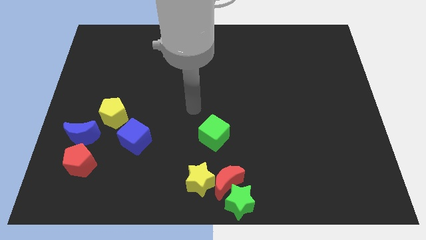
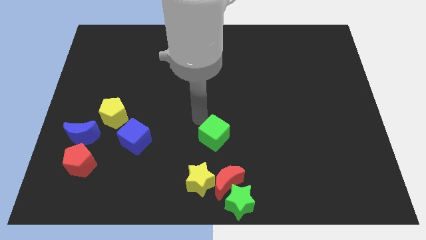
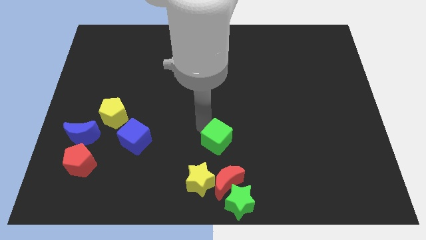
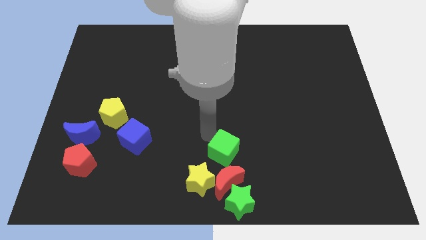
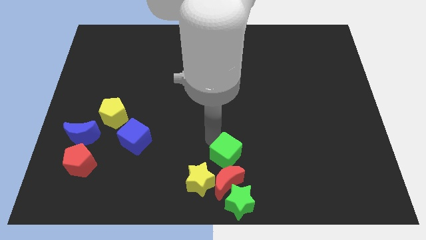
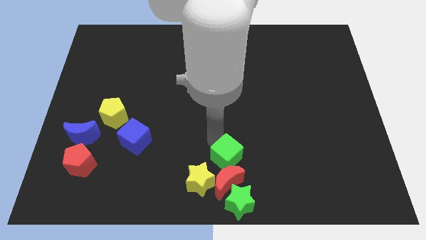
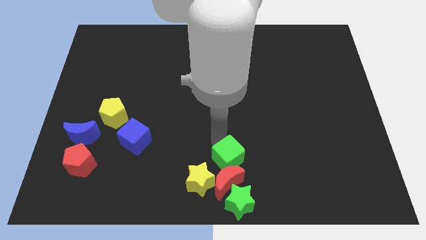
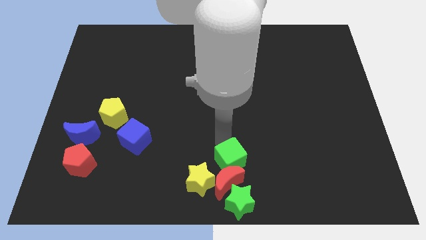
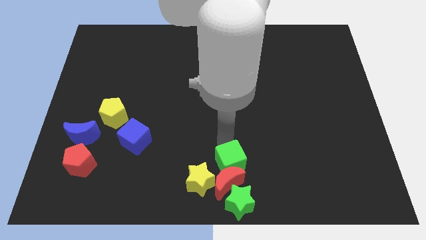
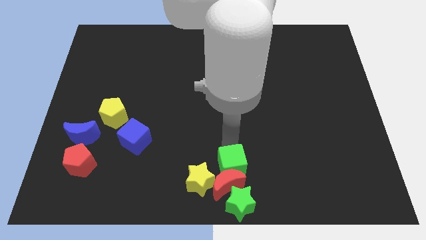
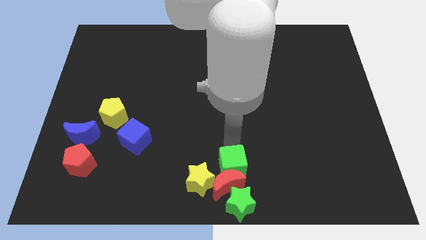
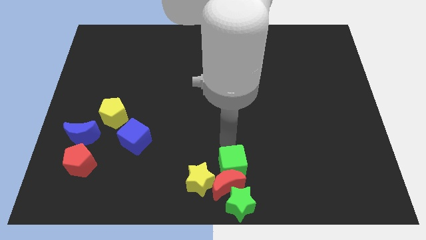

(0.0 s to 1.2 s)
move green cube close to red crescent

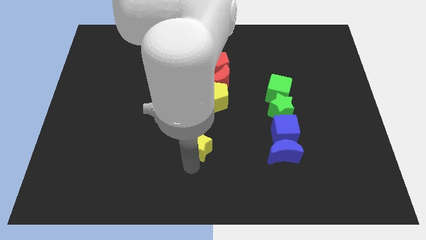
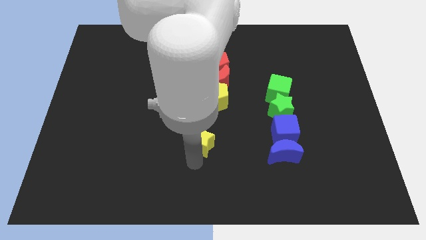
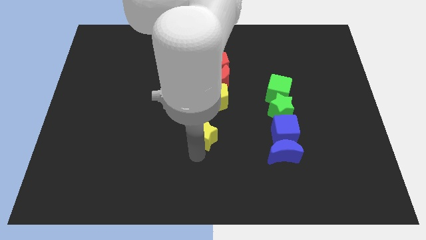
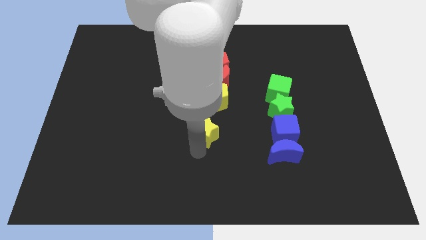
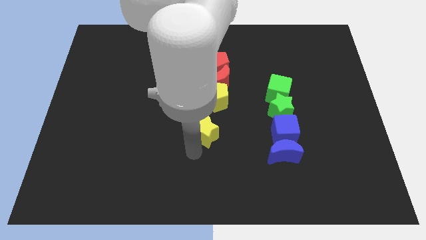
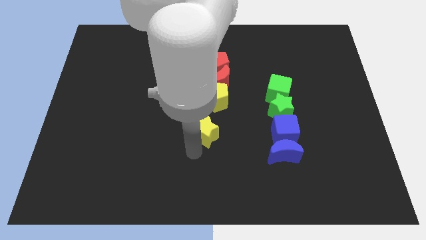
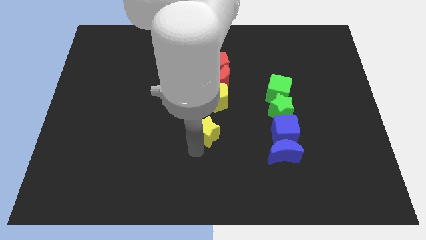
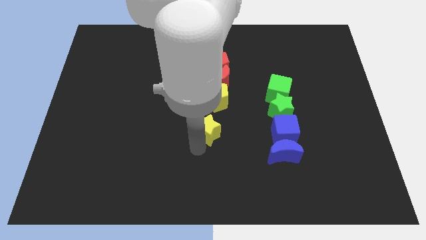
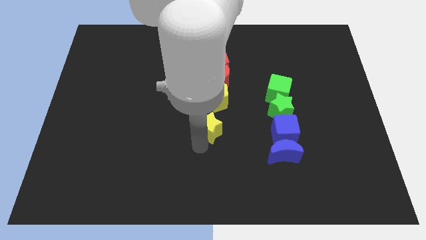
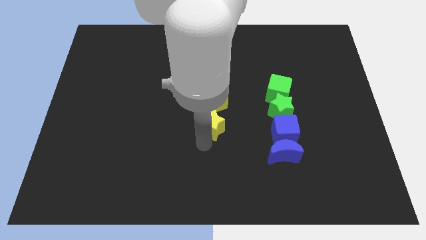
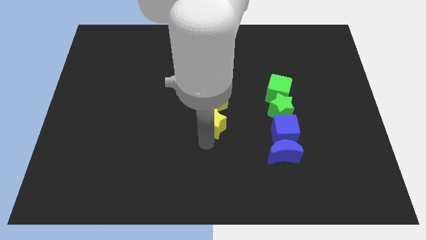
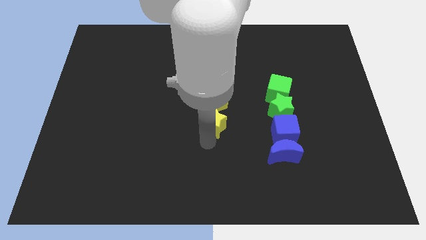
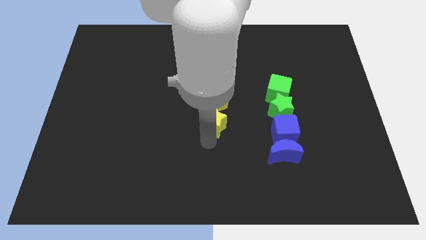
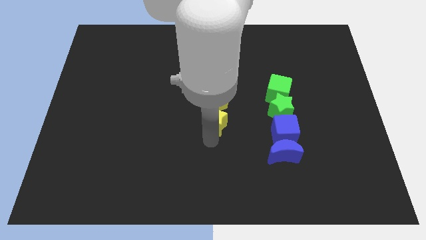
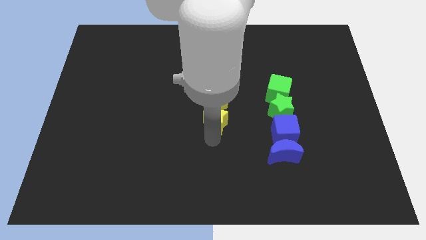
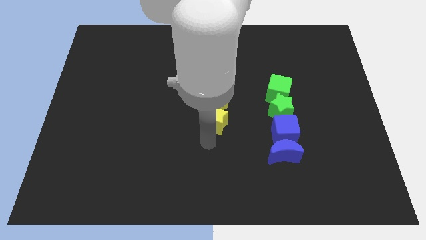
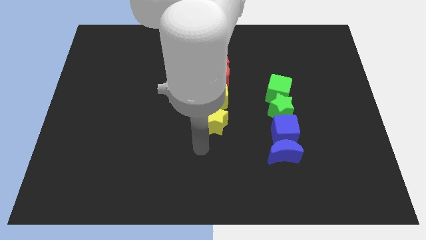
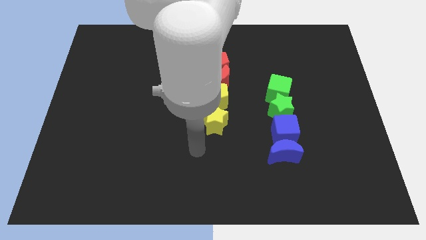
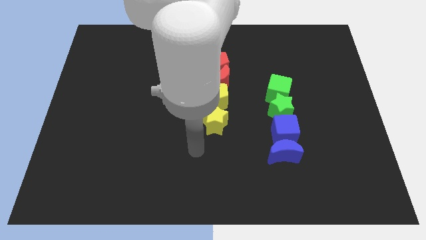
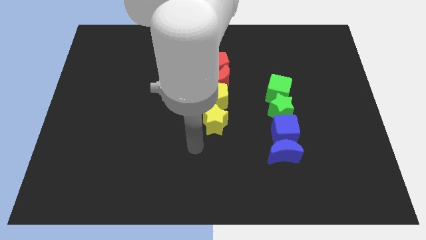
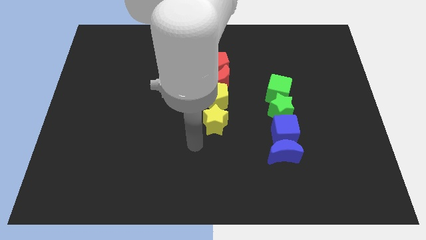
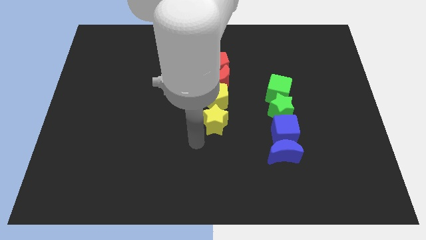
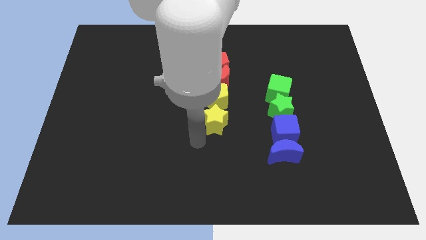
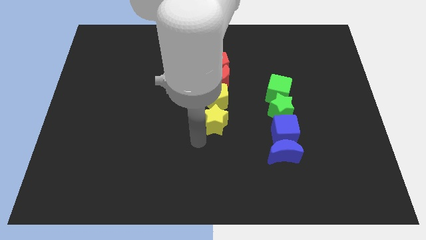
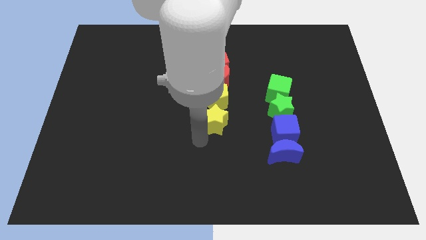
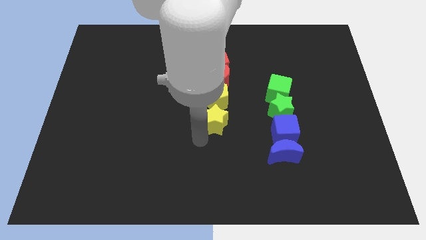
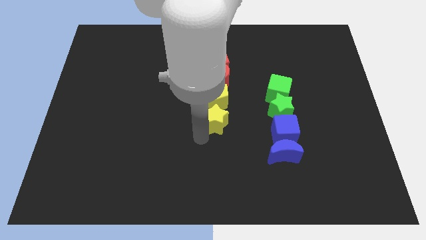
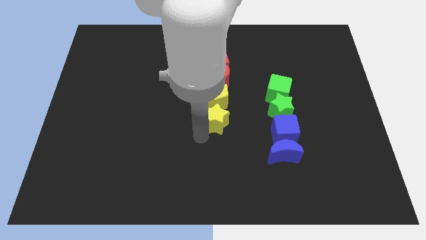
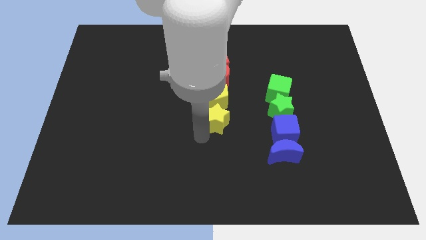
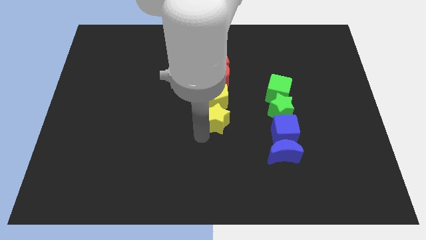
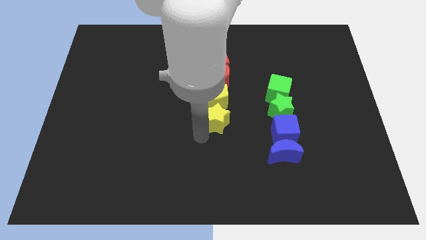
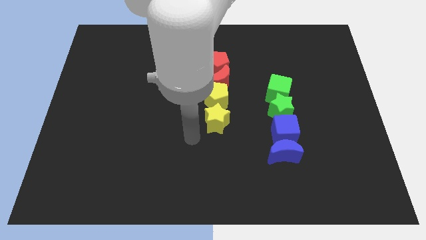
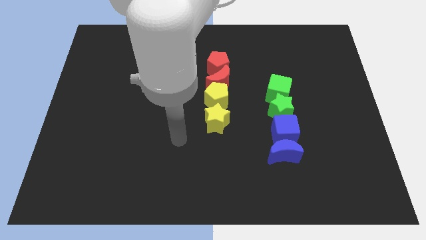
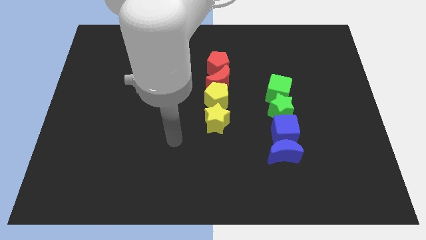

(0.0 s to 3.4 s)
push the yellow star to the bottom of the yellow pentagon

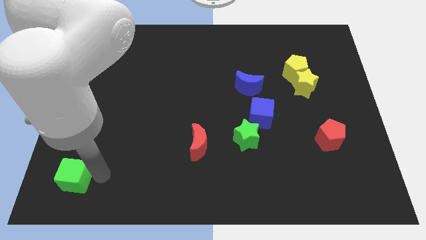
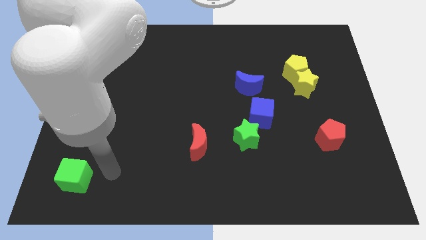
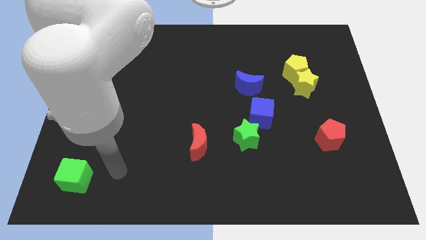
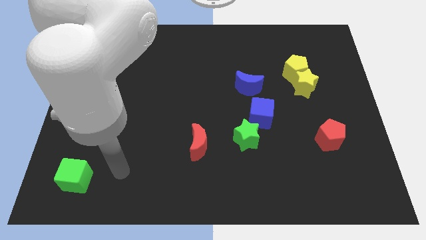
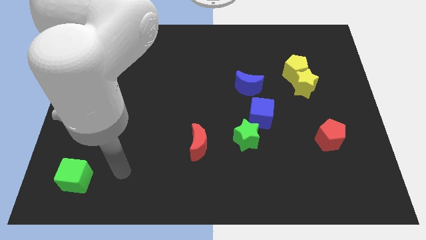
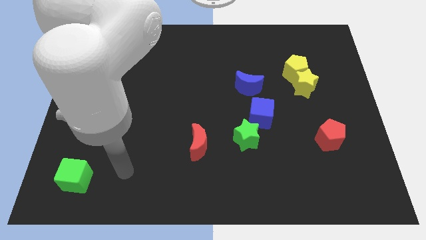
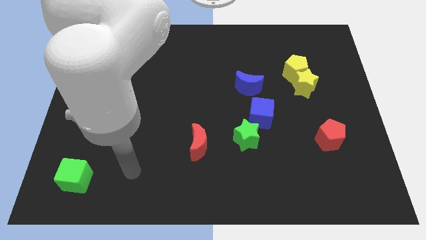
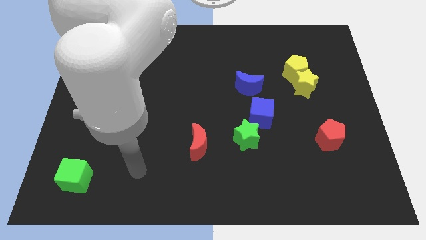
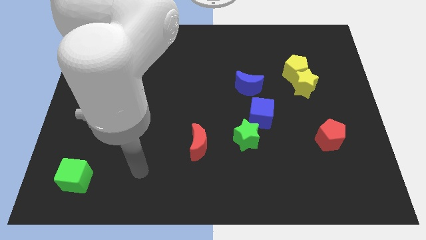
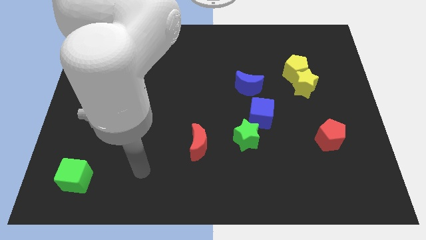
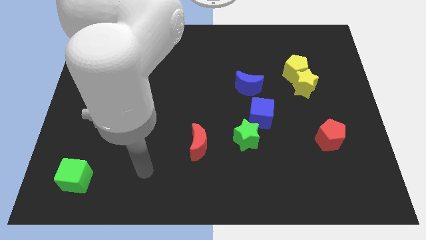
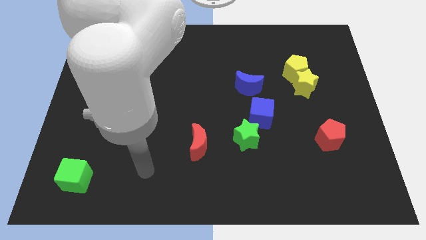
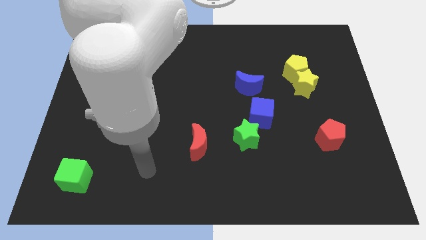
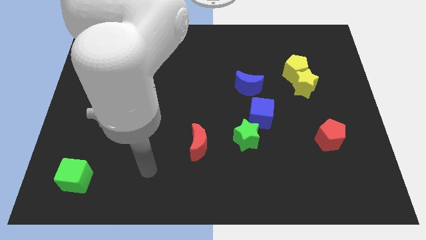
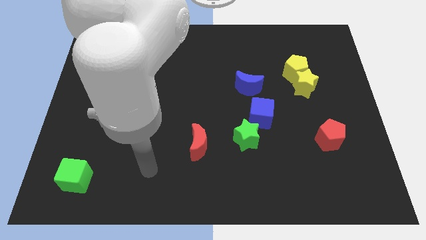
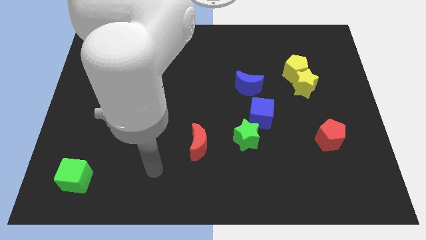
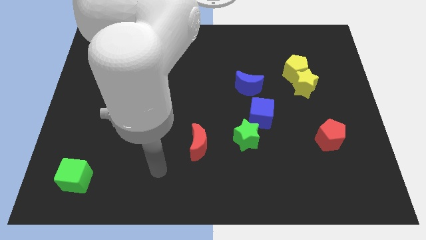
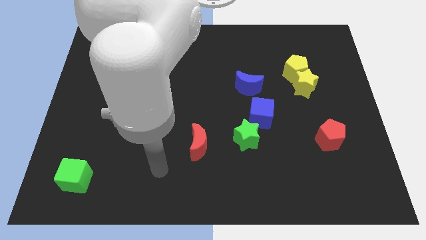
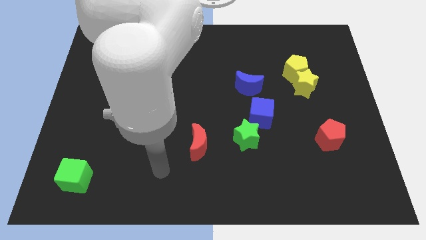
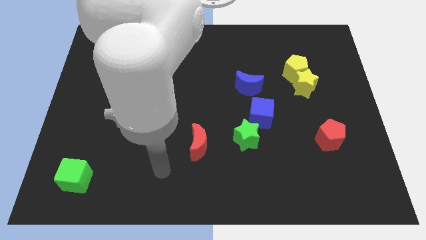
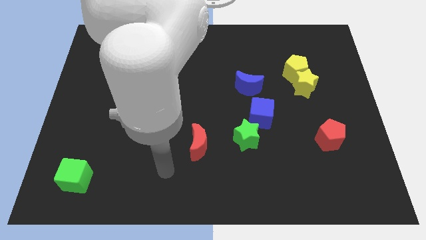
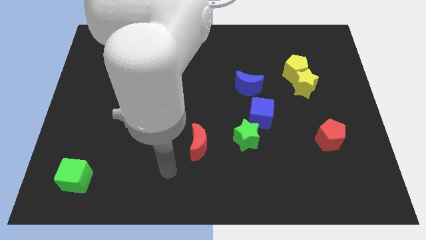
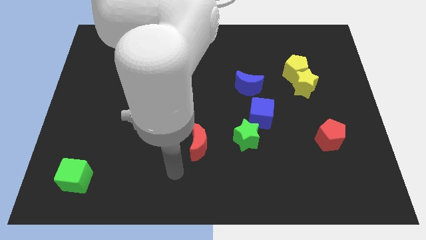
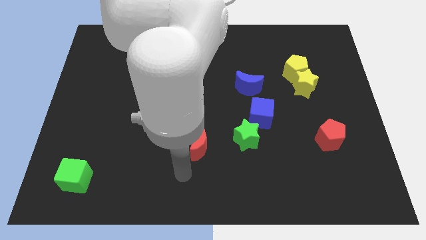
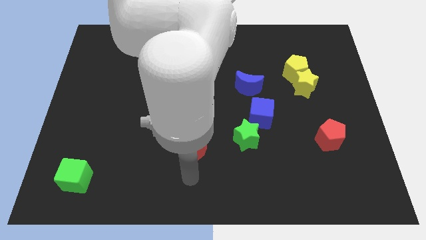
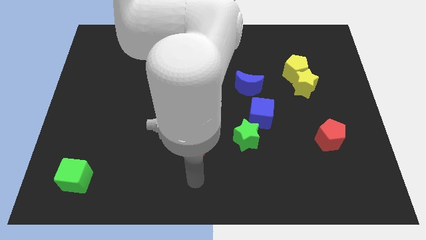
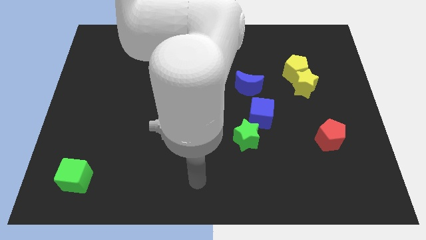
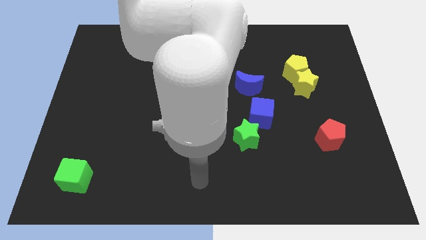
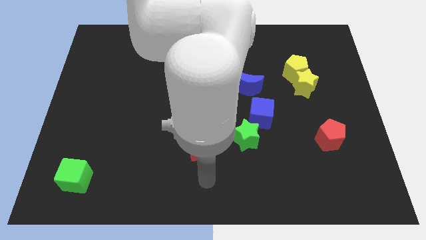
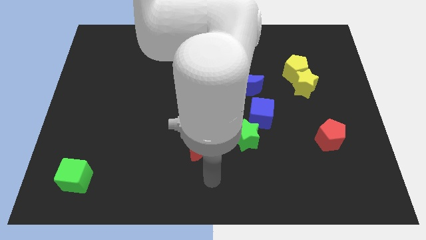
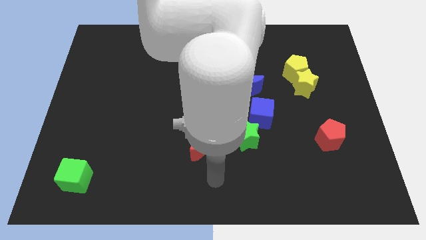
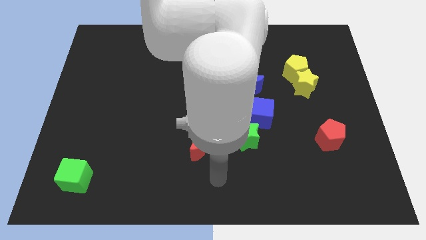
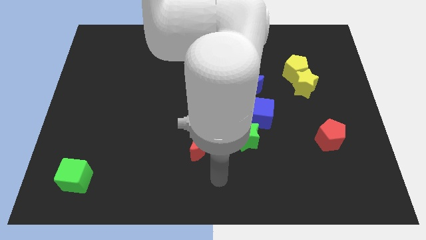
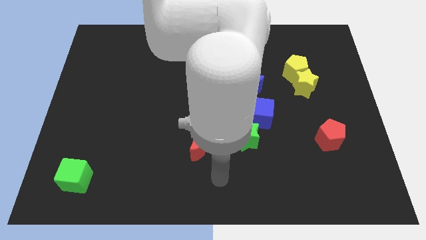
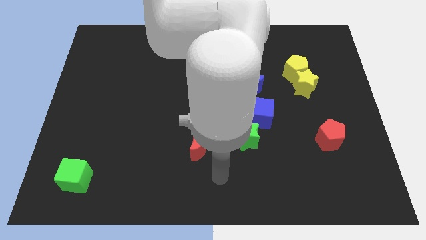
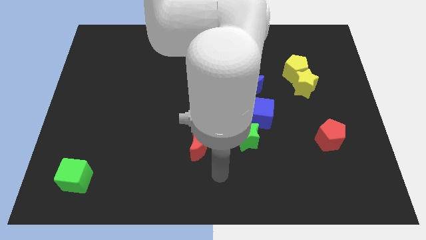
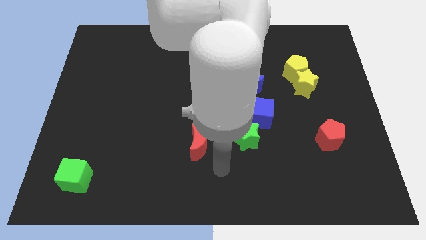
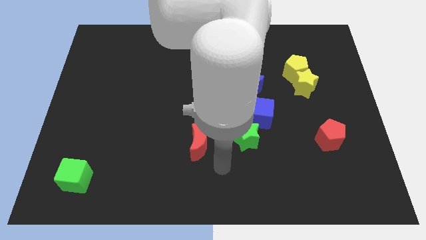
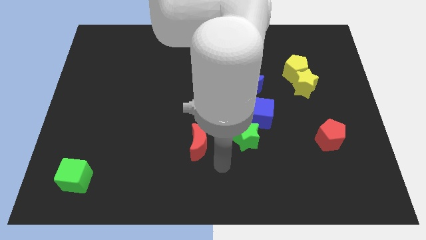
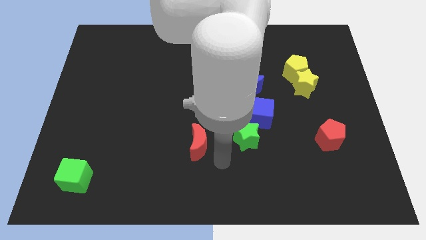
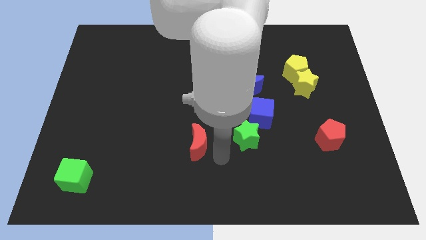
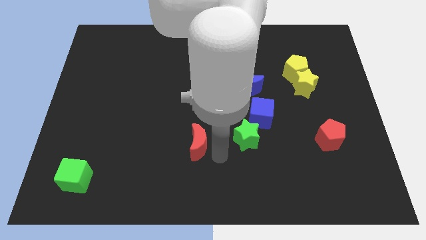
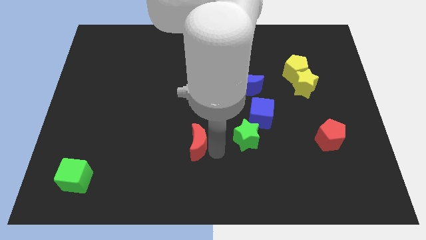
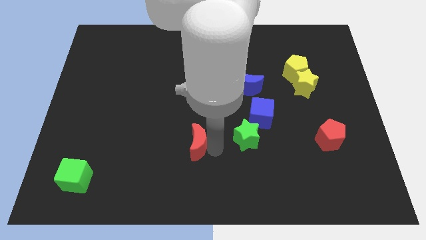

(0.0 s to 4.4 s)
move arm to the right of red crescent
